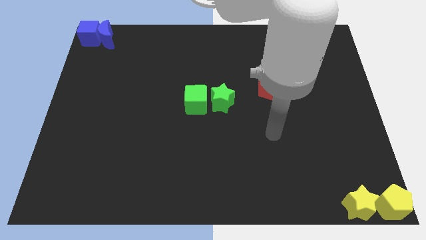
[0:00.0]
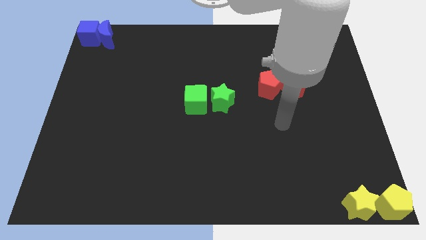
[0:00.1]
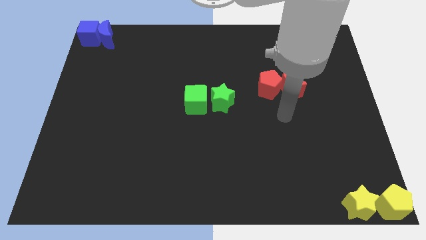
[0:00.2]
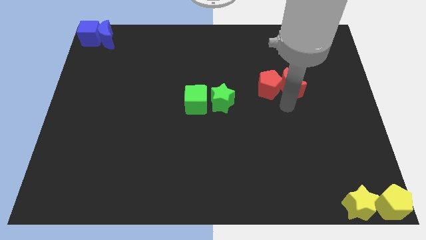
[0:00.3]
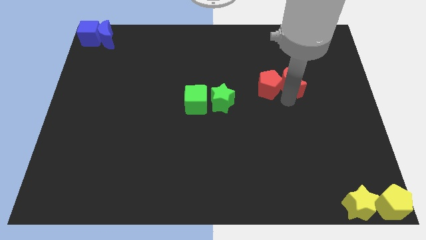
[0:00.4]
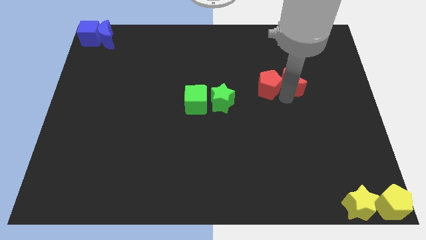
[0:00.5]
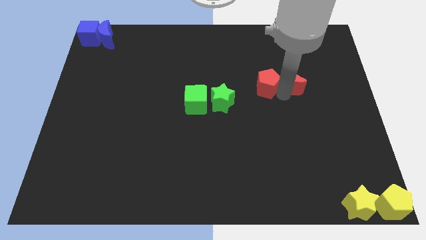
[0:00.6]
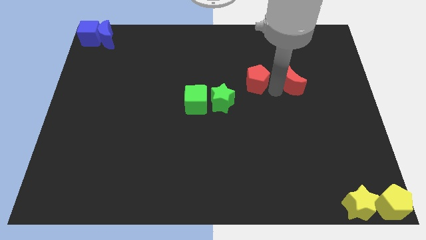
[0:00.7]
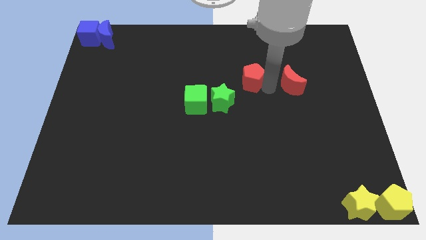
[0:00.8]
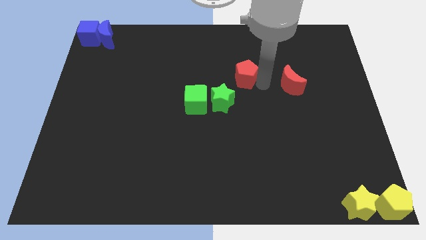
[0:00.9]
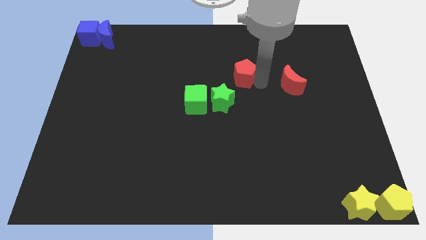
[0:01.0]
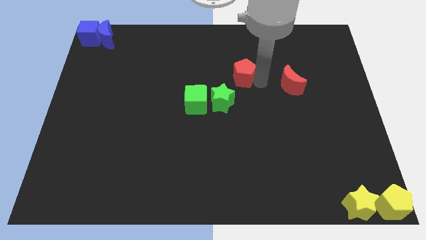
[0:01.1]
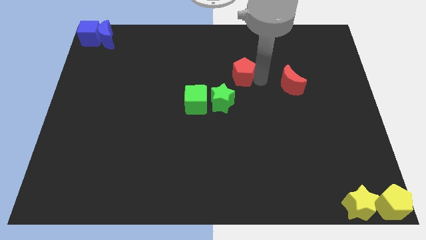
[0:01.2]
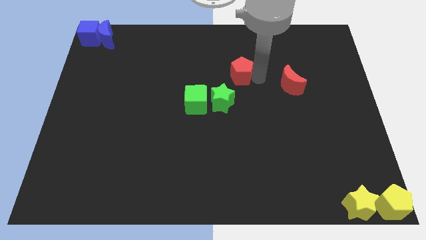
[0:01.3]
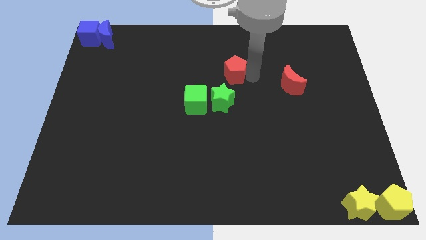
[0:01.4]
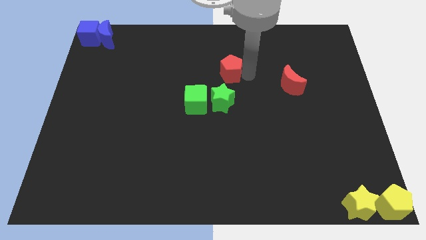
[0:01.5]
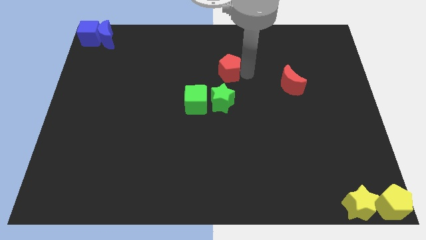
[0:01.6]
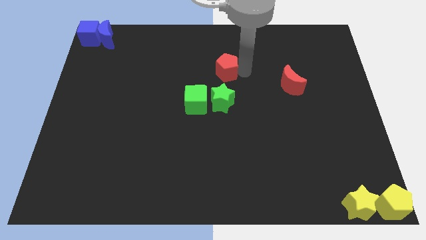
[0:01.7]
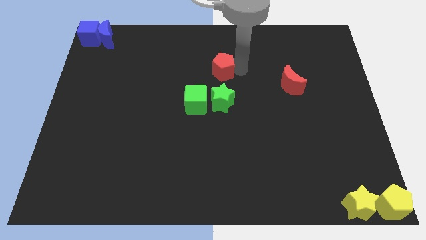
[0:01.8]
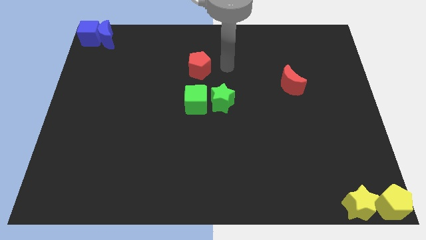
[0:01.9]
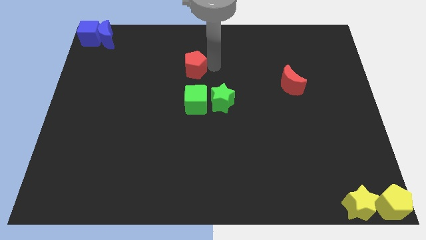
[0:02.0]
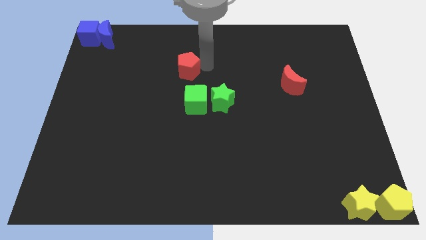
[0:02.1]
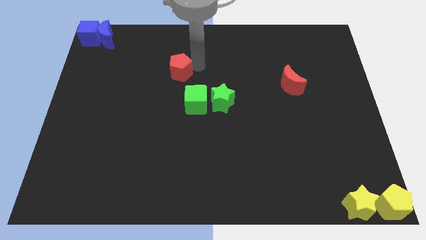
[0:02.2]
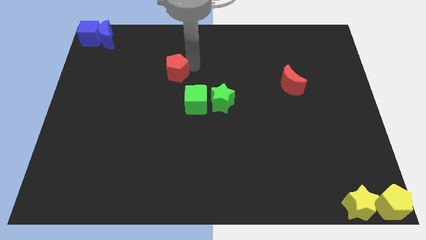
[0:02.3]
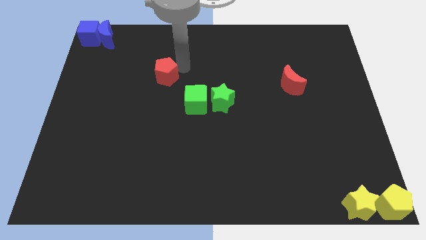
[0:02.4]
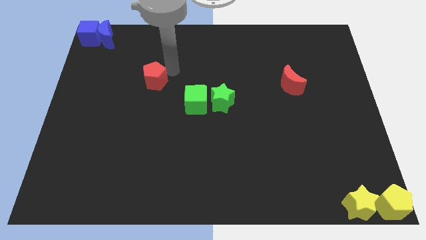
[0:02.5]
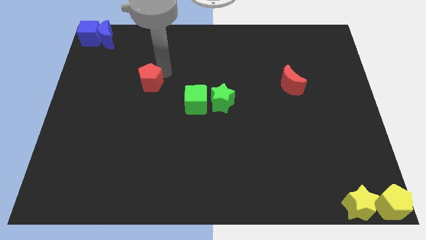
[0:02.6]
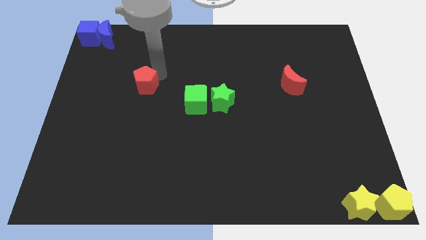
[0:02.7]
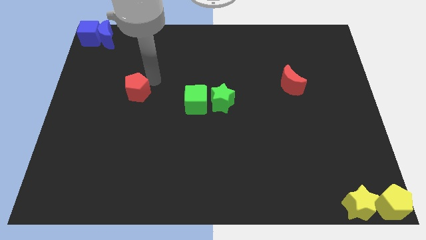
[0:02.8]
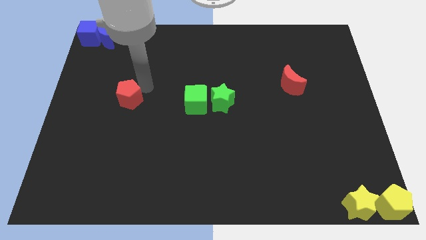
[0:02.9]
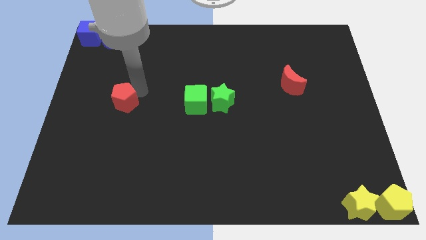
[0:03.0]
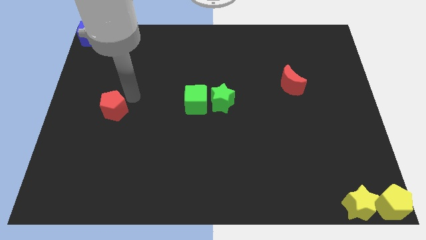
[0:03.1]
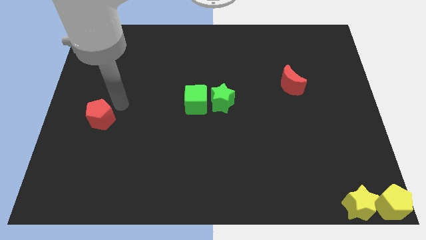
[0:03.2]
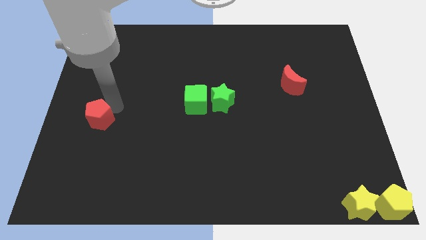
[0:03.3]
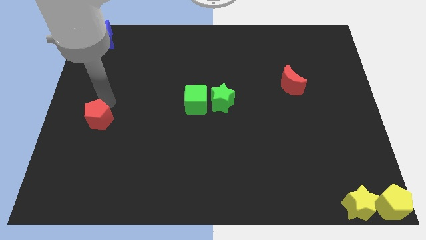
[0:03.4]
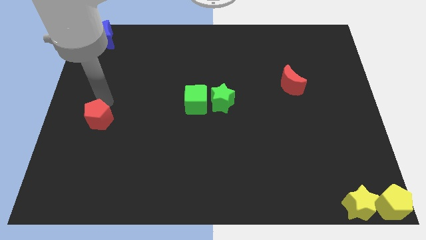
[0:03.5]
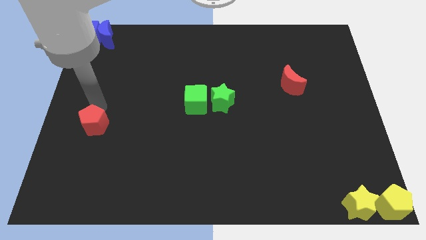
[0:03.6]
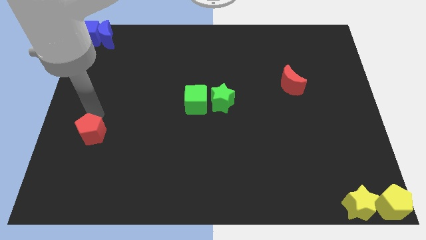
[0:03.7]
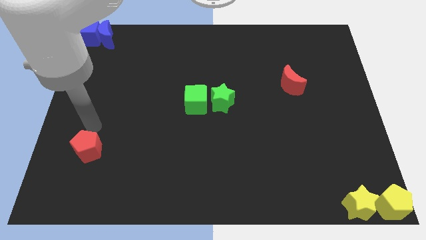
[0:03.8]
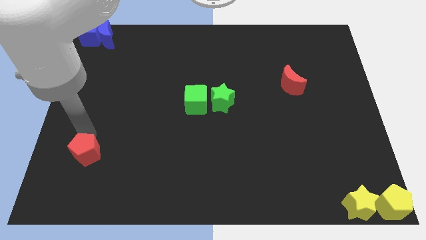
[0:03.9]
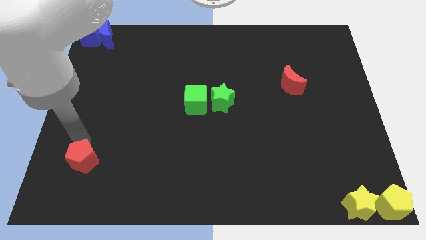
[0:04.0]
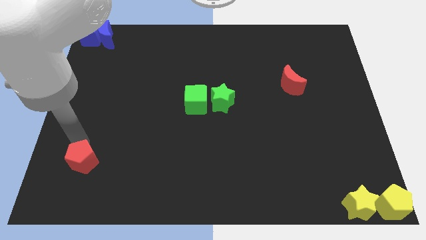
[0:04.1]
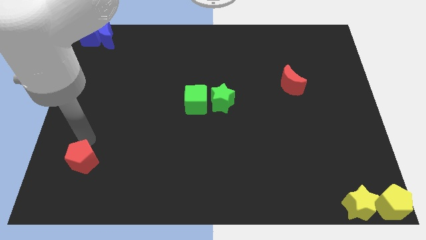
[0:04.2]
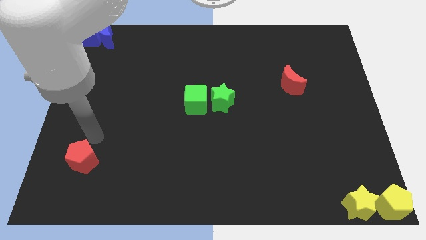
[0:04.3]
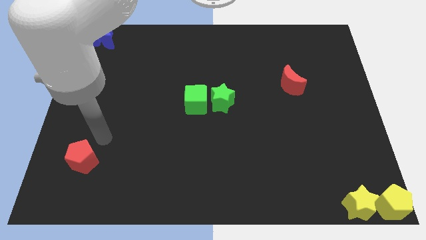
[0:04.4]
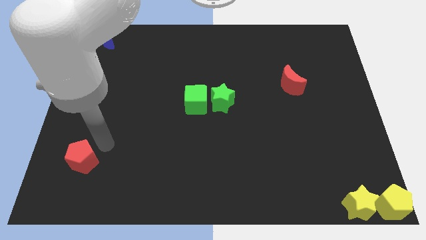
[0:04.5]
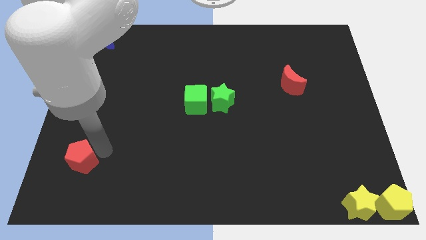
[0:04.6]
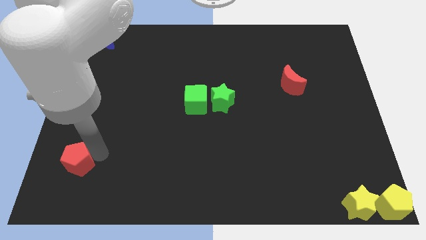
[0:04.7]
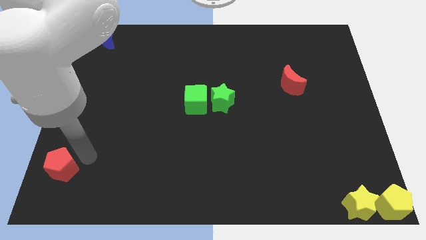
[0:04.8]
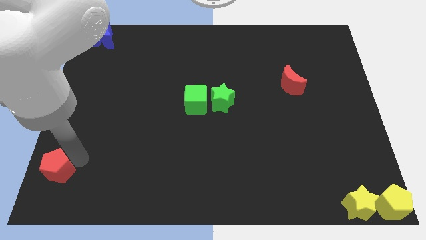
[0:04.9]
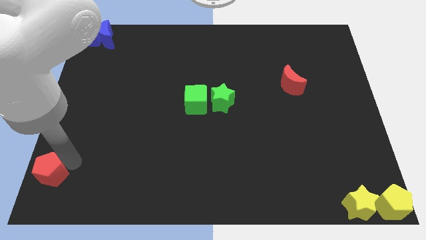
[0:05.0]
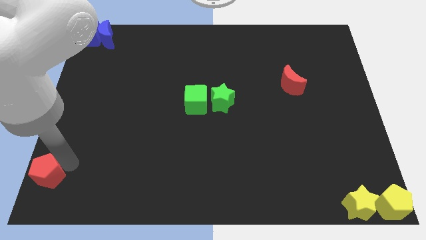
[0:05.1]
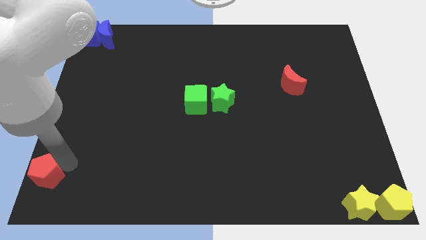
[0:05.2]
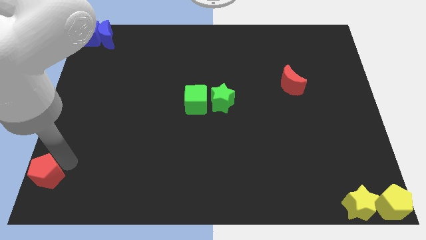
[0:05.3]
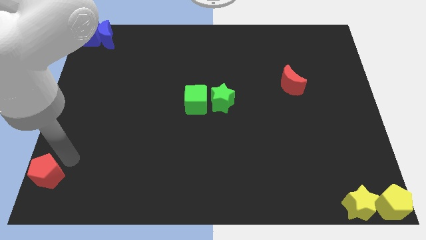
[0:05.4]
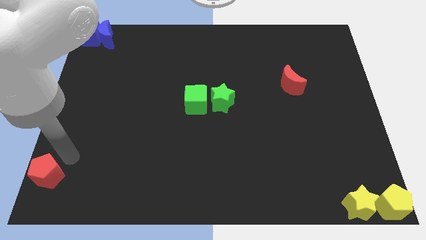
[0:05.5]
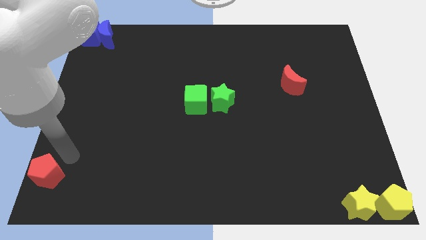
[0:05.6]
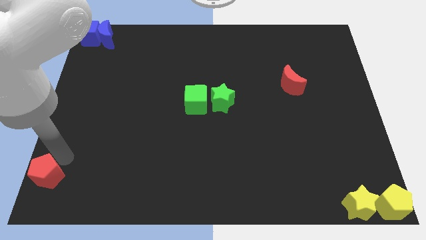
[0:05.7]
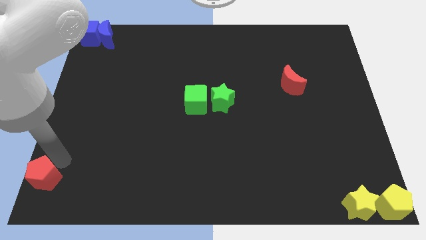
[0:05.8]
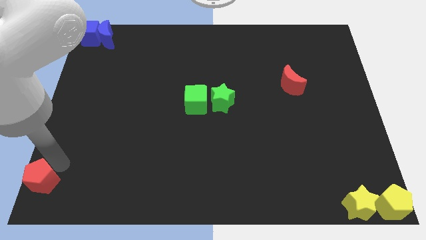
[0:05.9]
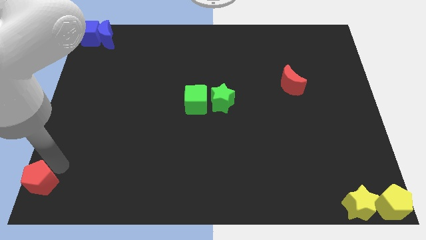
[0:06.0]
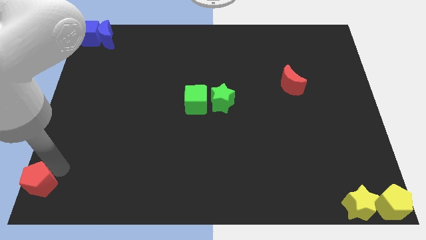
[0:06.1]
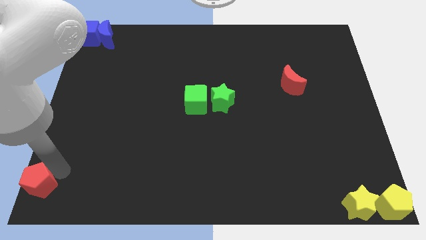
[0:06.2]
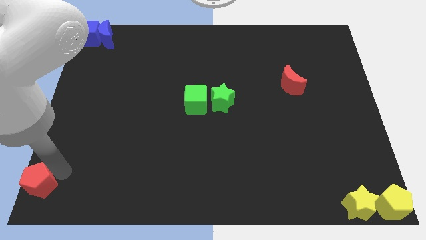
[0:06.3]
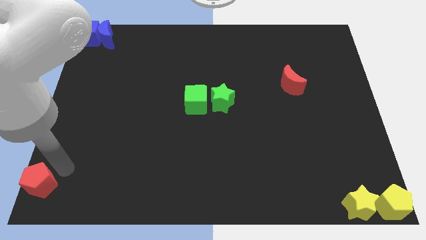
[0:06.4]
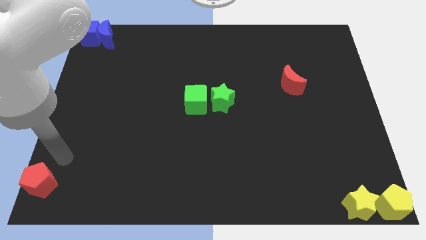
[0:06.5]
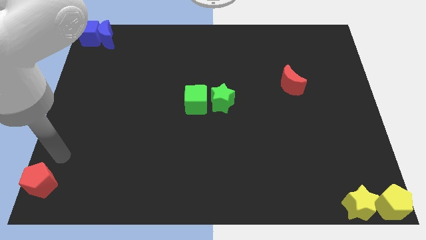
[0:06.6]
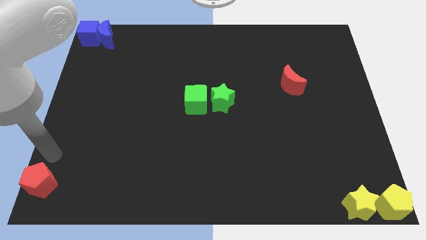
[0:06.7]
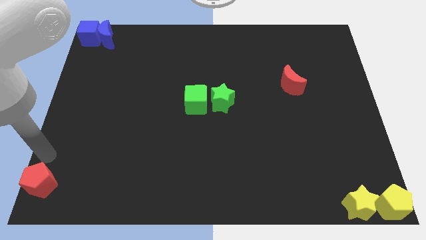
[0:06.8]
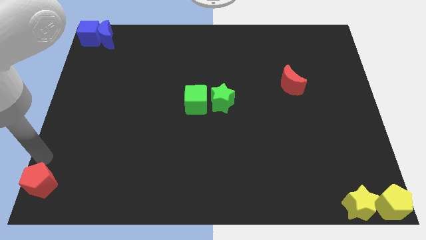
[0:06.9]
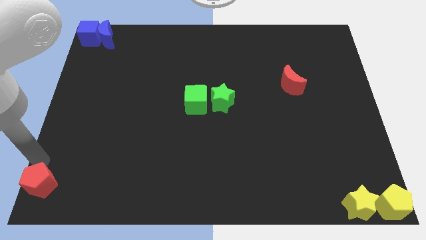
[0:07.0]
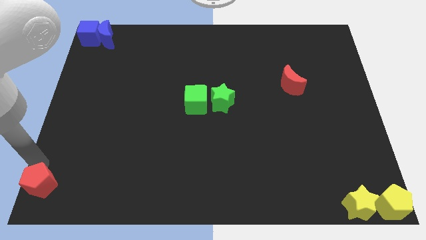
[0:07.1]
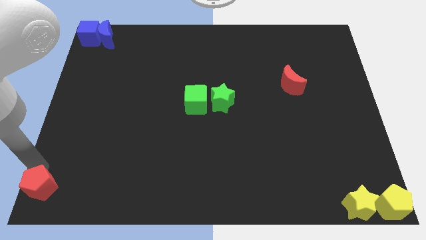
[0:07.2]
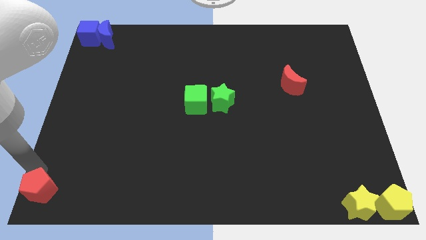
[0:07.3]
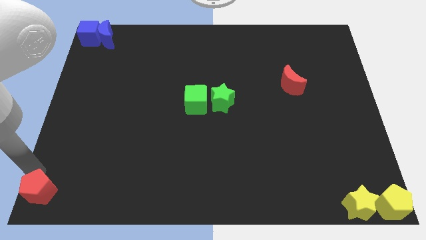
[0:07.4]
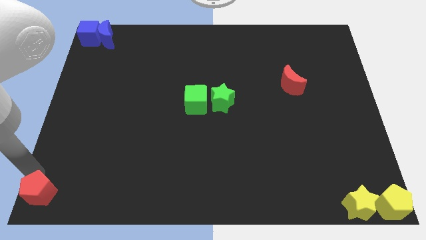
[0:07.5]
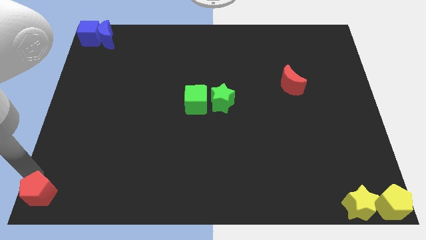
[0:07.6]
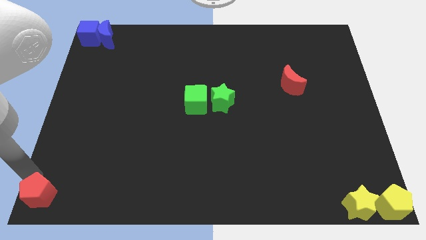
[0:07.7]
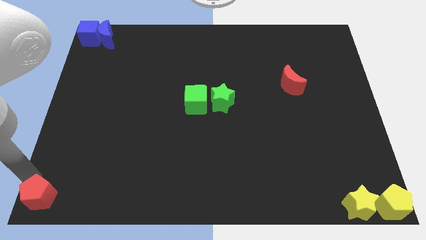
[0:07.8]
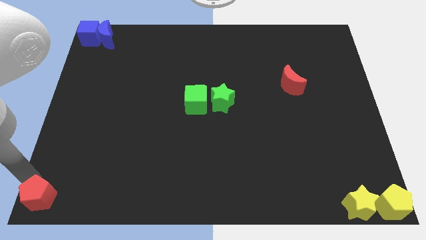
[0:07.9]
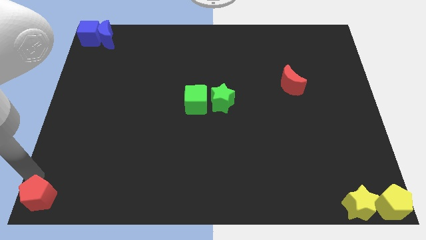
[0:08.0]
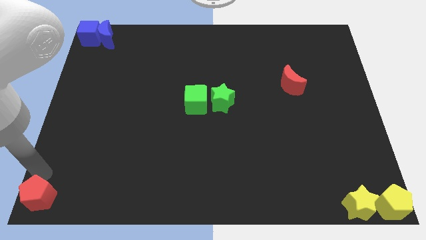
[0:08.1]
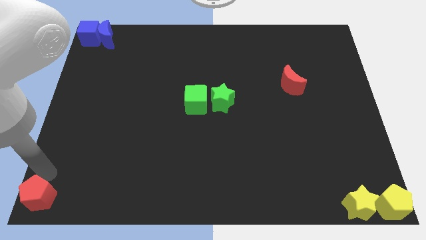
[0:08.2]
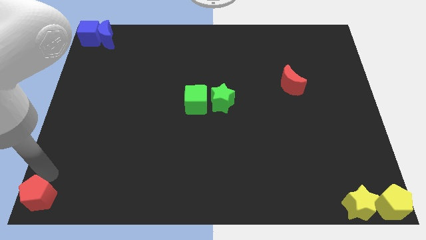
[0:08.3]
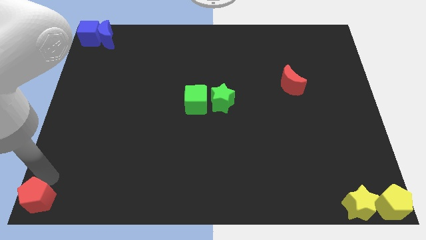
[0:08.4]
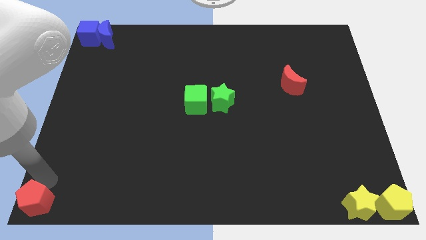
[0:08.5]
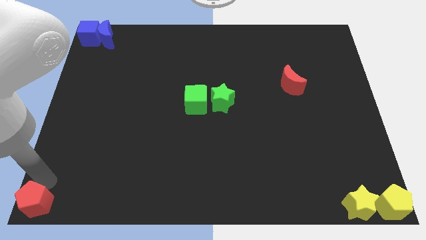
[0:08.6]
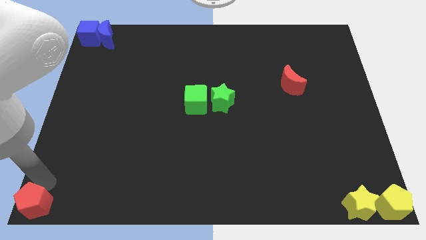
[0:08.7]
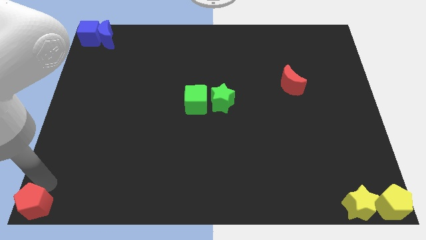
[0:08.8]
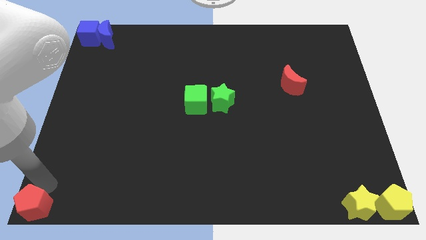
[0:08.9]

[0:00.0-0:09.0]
move the red pentagon to the bottom left corner of the board
